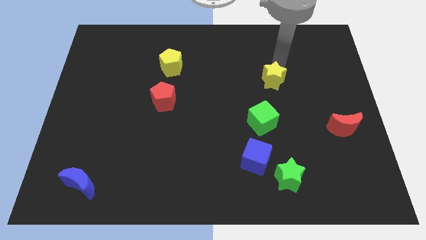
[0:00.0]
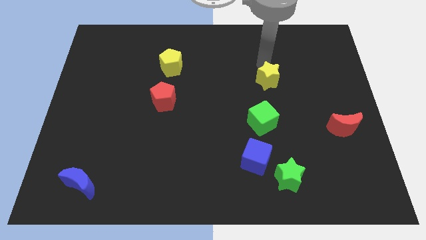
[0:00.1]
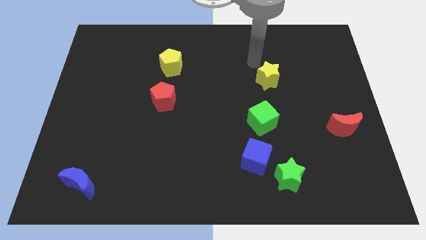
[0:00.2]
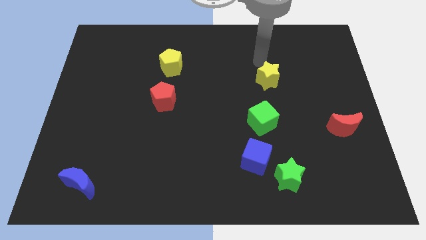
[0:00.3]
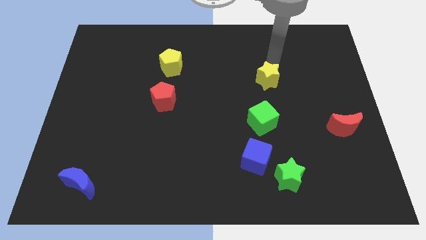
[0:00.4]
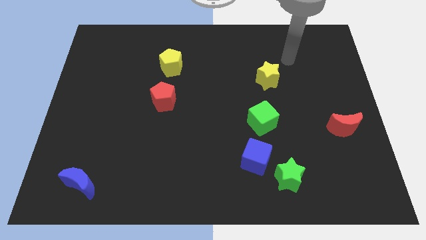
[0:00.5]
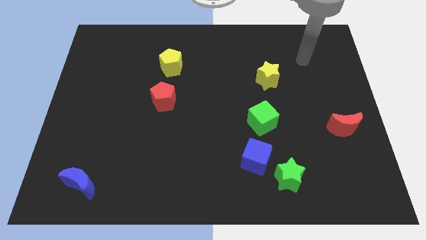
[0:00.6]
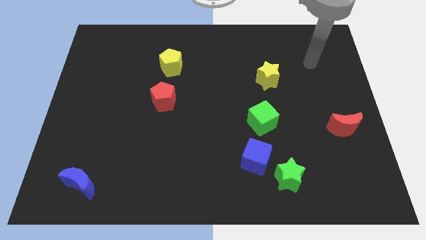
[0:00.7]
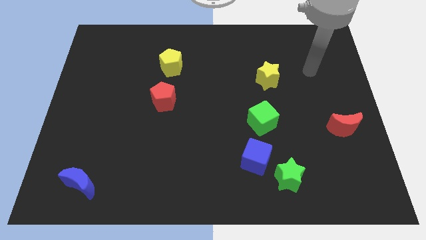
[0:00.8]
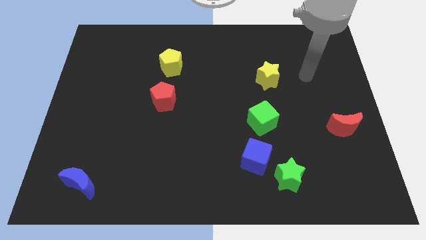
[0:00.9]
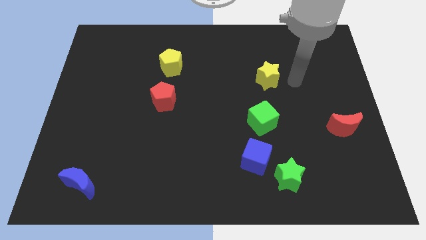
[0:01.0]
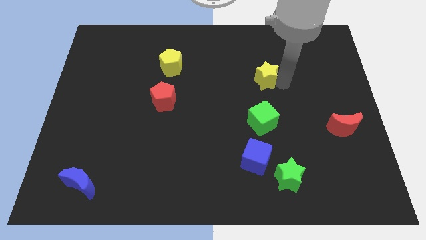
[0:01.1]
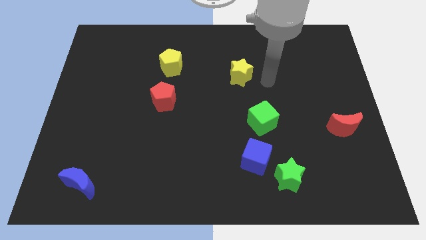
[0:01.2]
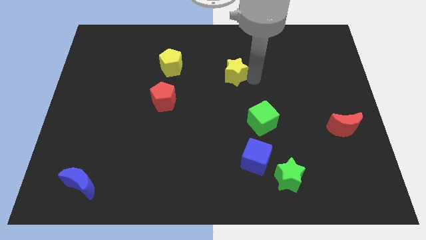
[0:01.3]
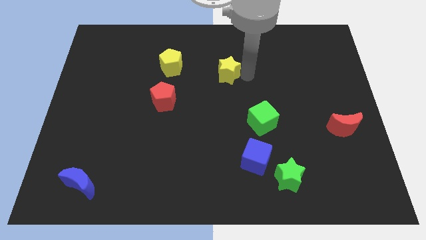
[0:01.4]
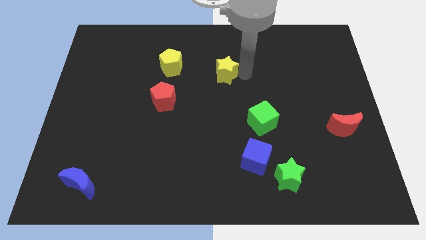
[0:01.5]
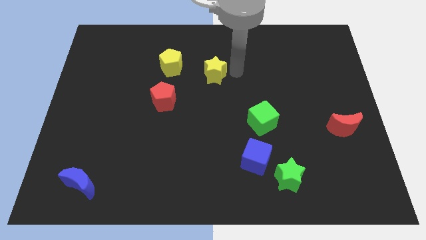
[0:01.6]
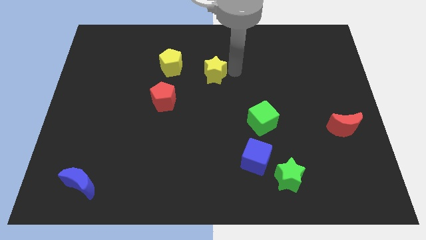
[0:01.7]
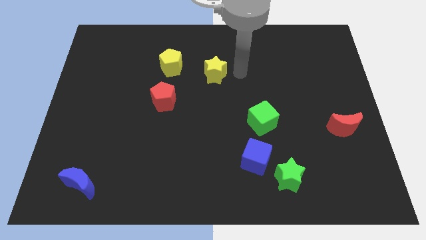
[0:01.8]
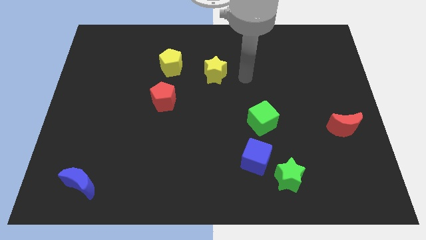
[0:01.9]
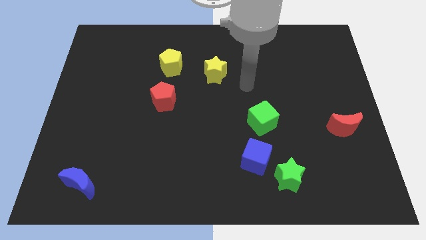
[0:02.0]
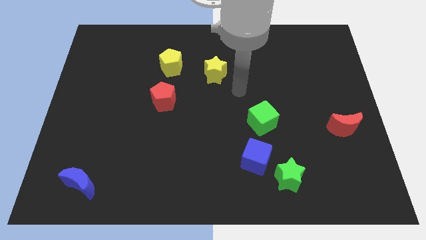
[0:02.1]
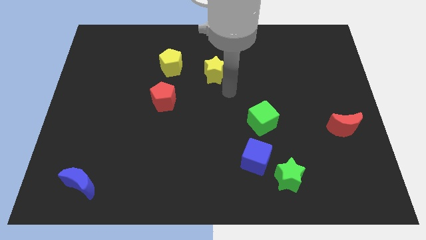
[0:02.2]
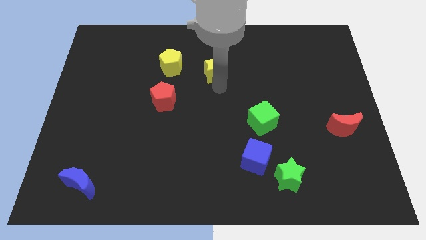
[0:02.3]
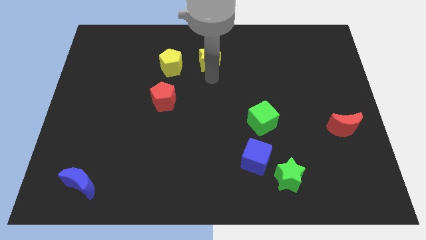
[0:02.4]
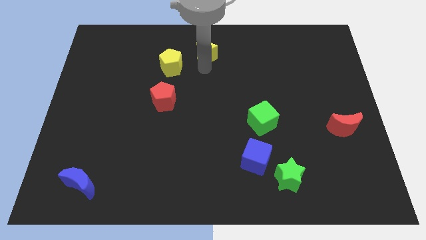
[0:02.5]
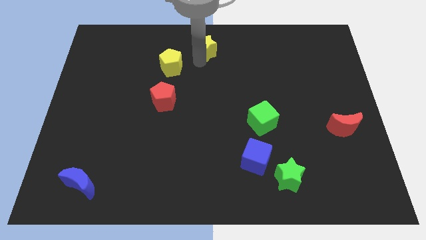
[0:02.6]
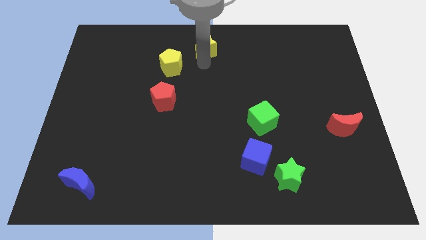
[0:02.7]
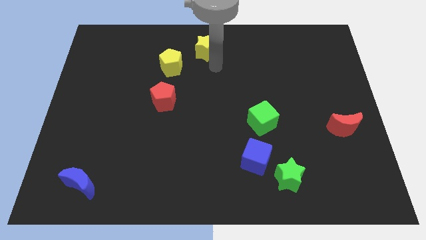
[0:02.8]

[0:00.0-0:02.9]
move yellow star diagonal to yellow pentagon

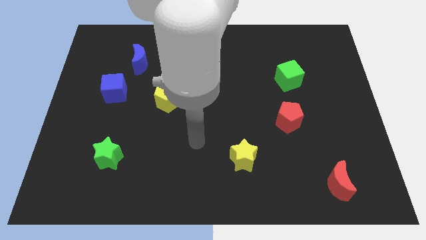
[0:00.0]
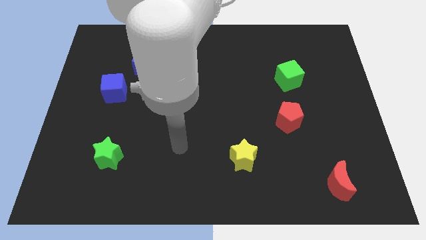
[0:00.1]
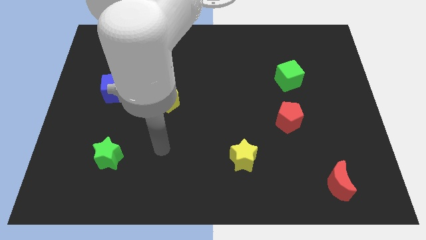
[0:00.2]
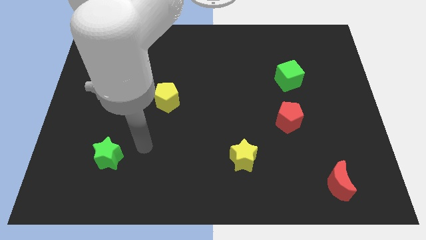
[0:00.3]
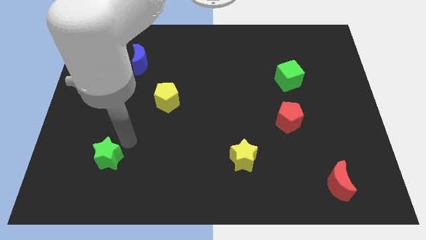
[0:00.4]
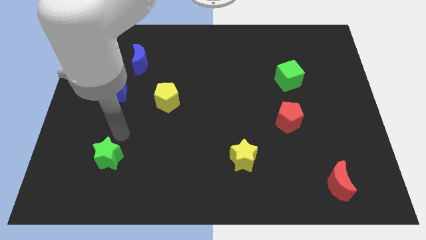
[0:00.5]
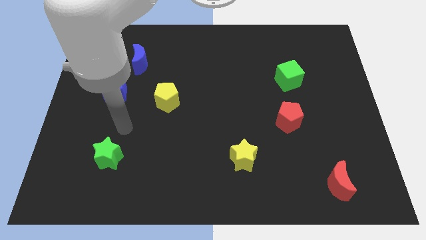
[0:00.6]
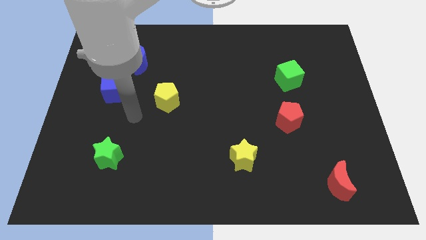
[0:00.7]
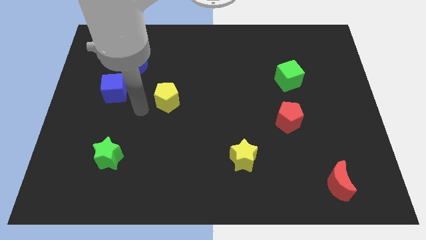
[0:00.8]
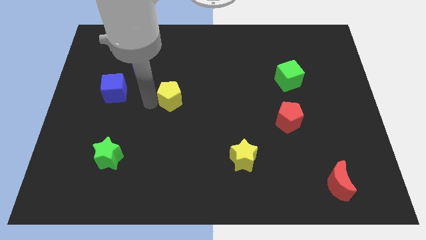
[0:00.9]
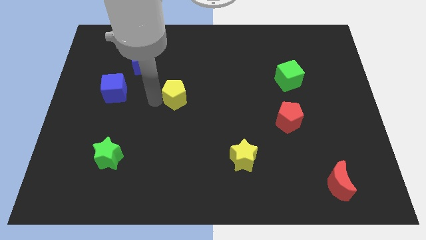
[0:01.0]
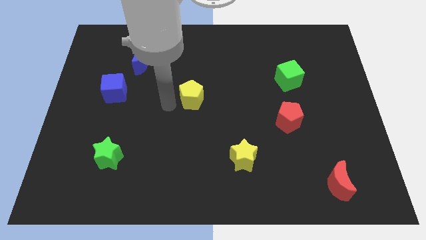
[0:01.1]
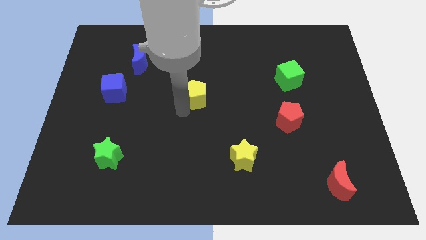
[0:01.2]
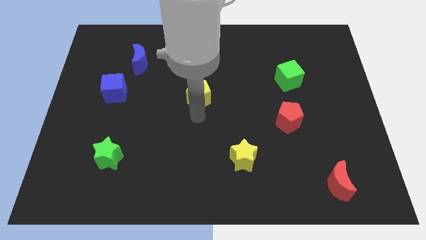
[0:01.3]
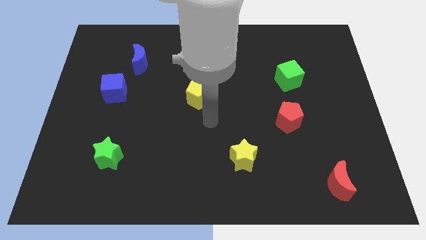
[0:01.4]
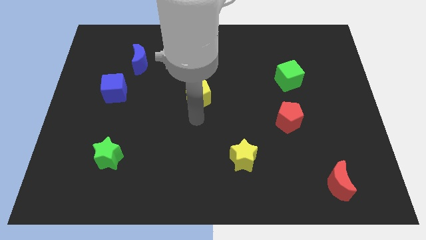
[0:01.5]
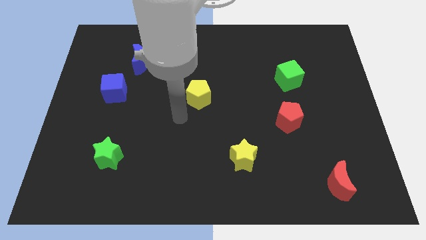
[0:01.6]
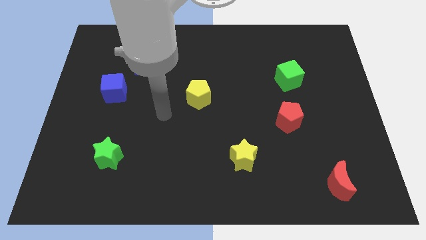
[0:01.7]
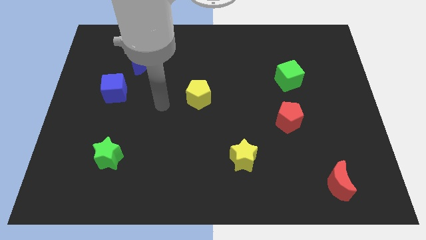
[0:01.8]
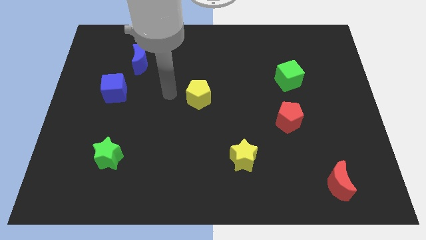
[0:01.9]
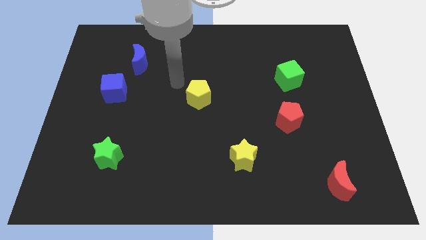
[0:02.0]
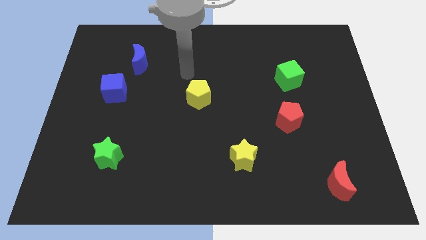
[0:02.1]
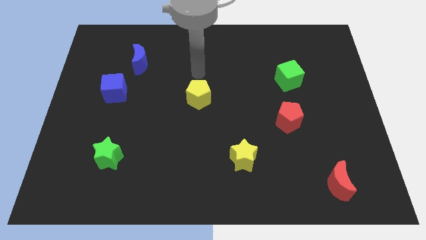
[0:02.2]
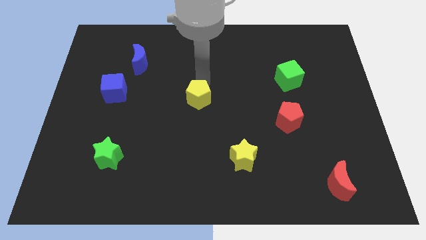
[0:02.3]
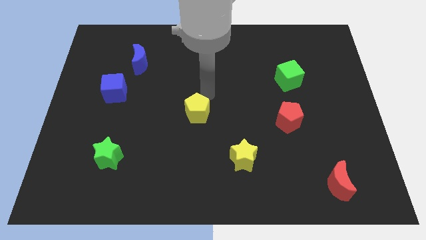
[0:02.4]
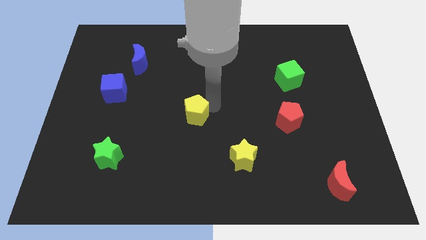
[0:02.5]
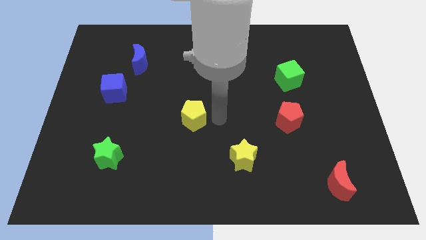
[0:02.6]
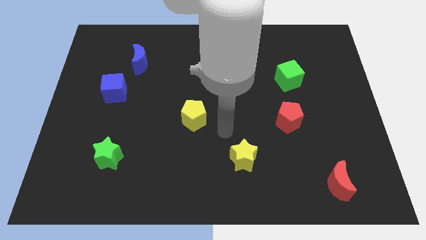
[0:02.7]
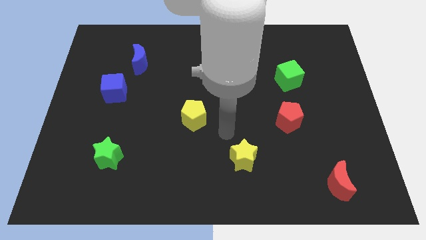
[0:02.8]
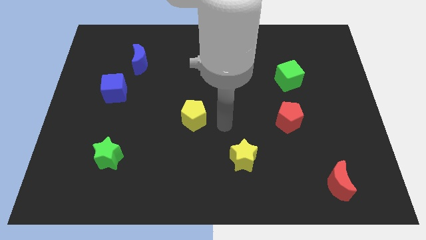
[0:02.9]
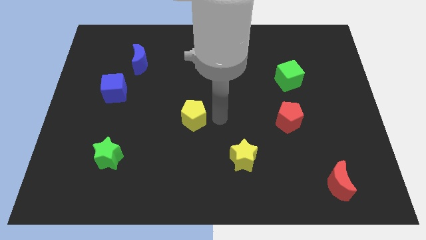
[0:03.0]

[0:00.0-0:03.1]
push the yellow pentagon parallel to the red pentagon

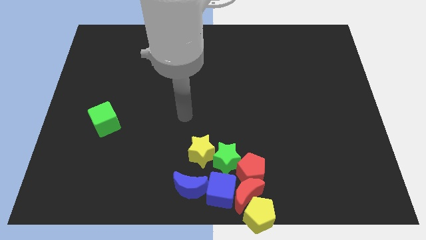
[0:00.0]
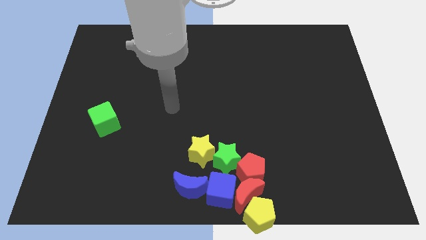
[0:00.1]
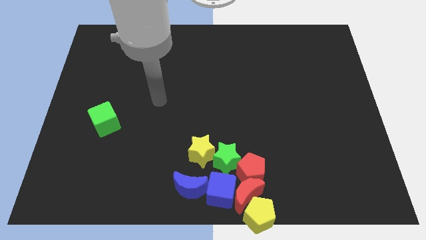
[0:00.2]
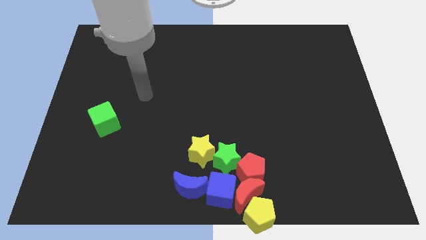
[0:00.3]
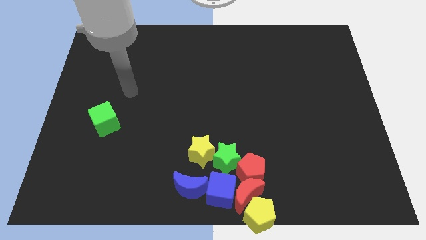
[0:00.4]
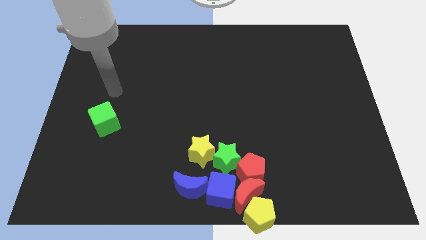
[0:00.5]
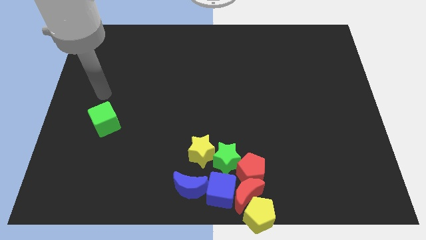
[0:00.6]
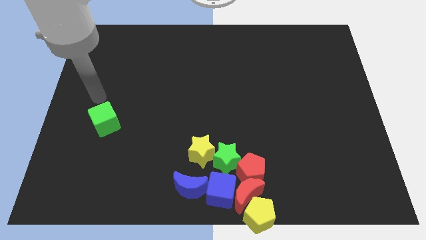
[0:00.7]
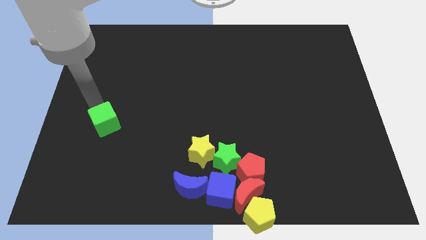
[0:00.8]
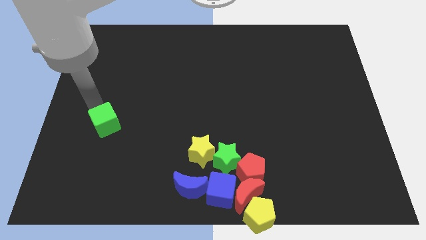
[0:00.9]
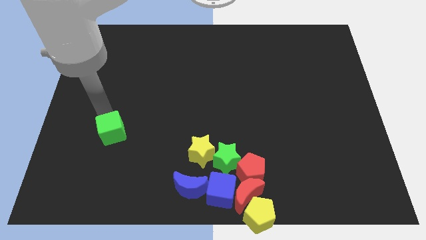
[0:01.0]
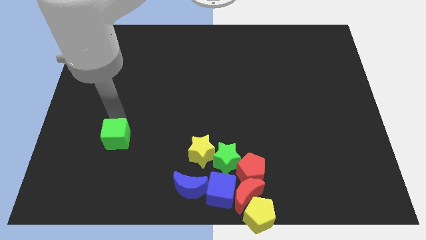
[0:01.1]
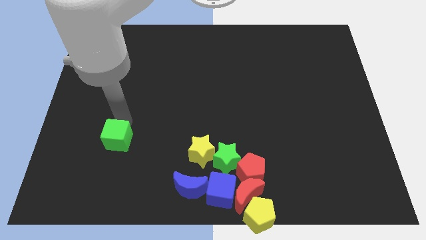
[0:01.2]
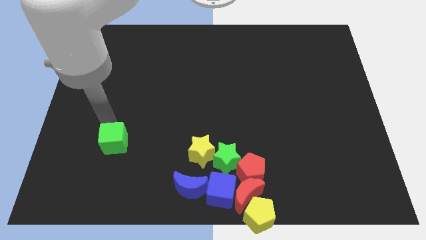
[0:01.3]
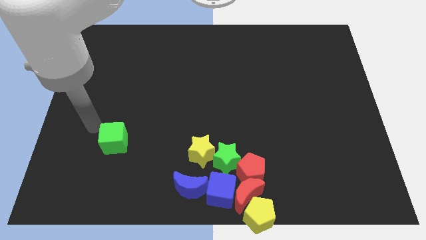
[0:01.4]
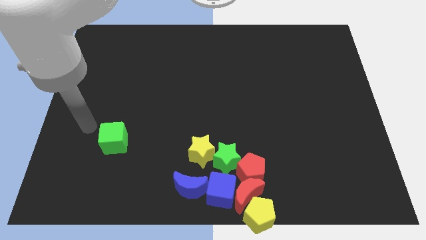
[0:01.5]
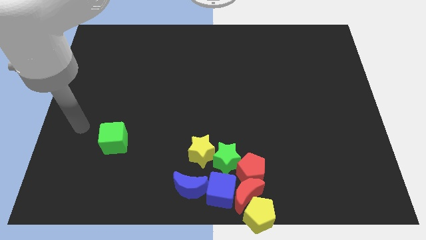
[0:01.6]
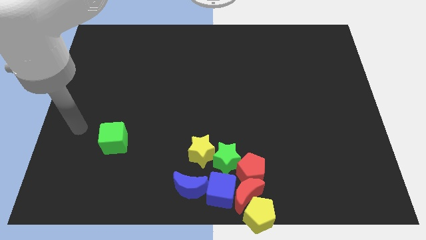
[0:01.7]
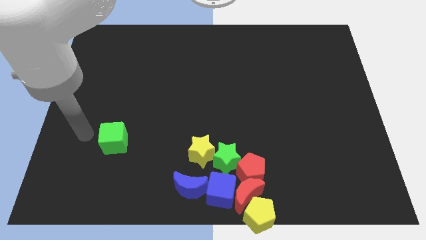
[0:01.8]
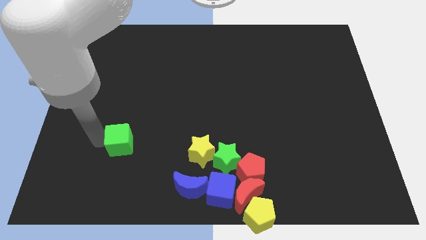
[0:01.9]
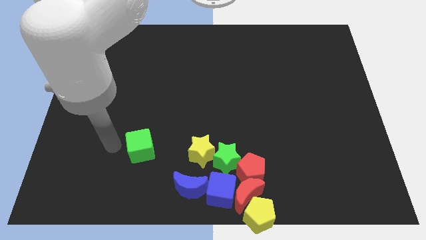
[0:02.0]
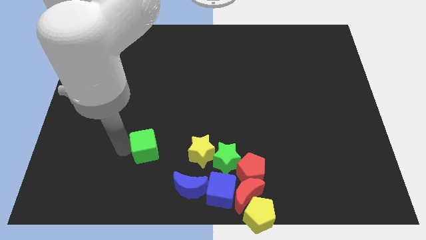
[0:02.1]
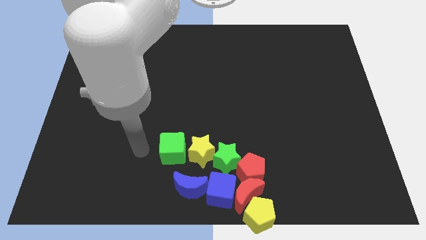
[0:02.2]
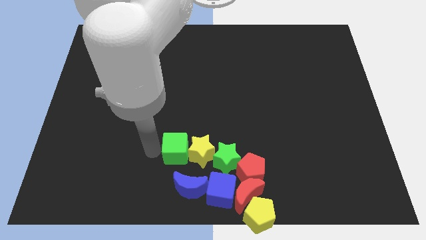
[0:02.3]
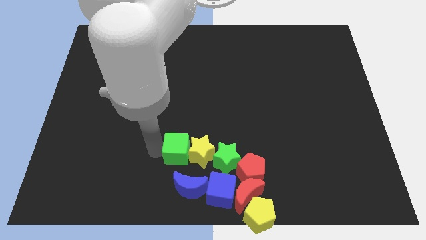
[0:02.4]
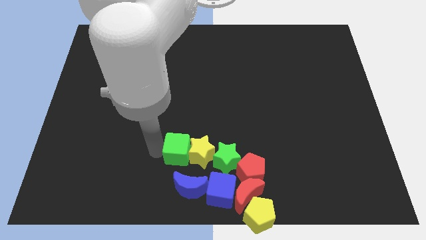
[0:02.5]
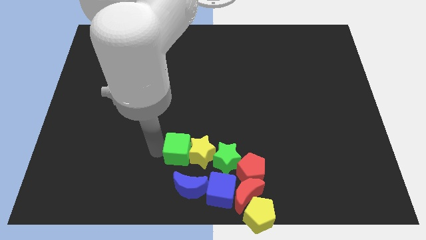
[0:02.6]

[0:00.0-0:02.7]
push the green cube to the left of the yellow star

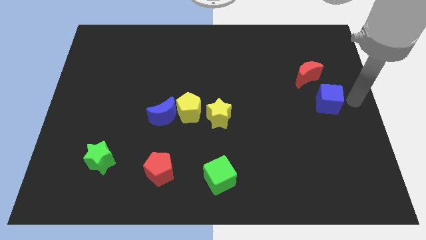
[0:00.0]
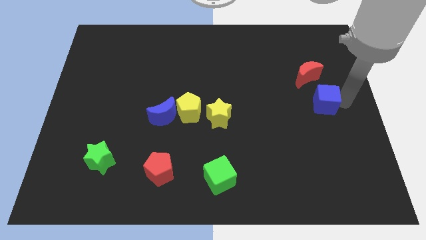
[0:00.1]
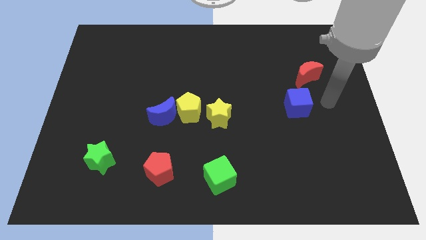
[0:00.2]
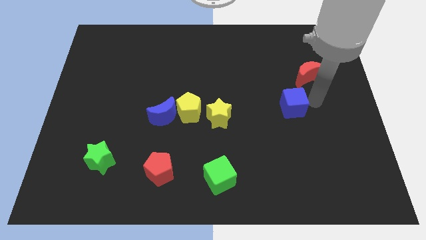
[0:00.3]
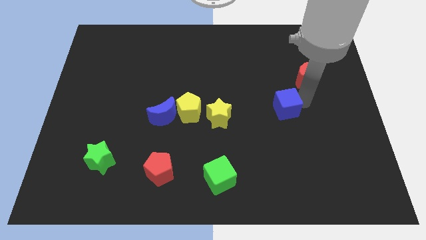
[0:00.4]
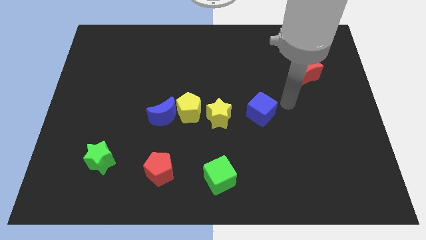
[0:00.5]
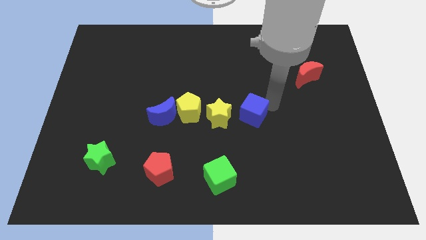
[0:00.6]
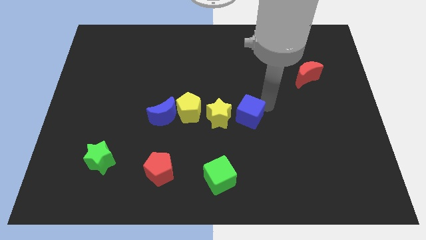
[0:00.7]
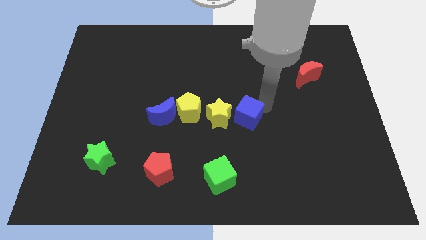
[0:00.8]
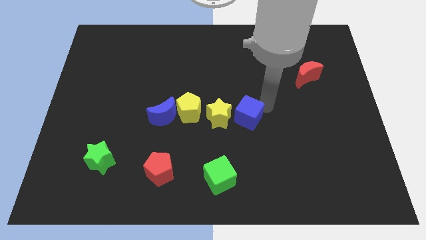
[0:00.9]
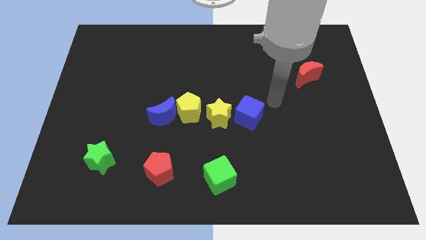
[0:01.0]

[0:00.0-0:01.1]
move the blue cube to the right of the yellow star
